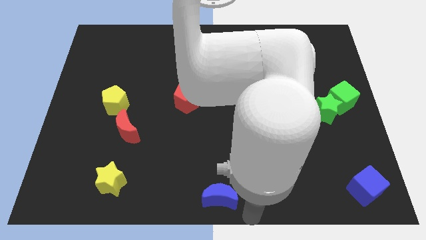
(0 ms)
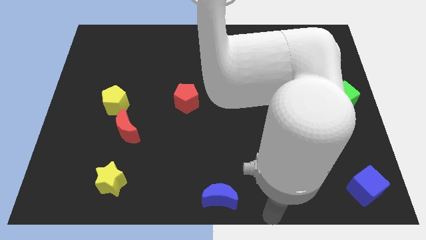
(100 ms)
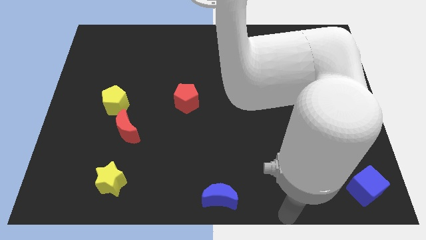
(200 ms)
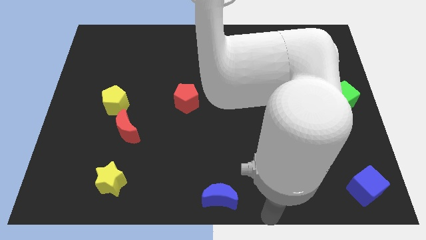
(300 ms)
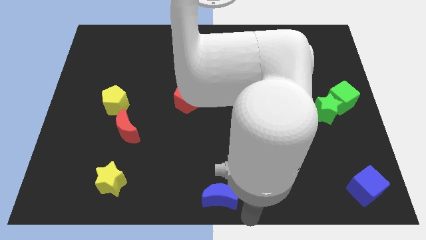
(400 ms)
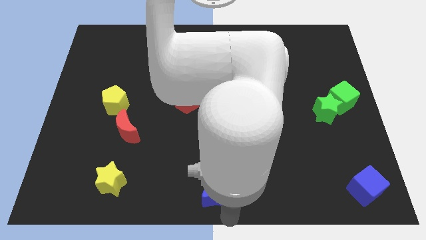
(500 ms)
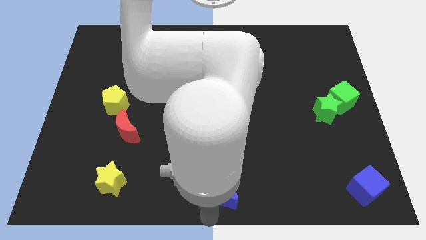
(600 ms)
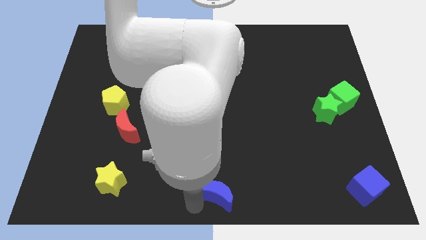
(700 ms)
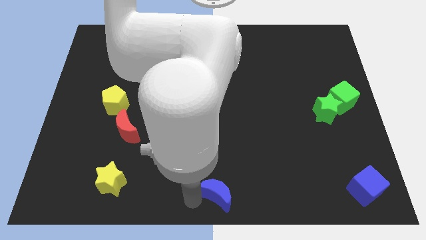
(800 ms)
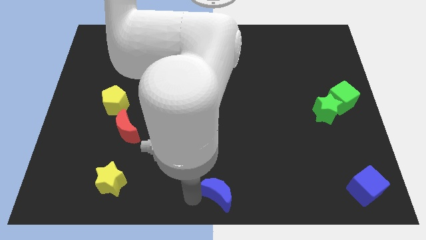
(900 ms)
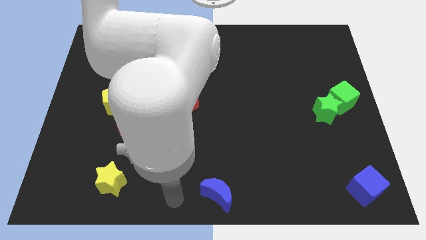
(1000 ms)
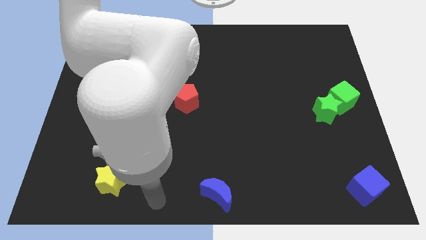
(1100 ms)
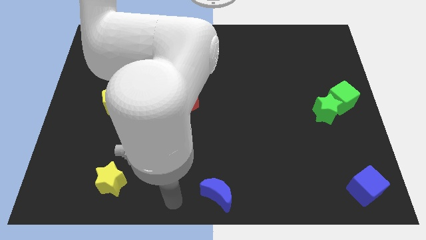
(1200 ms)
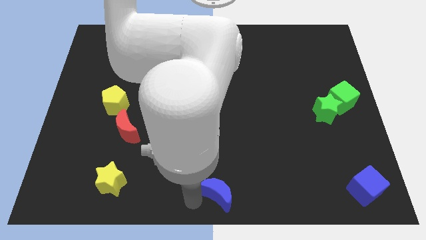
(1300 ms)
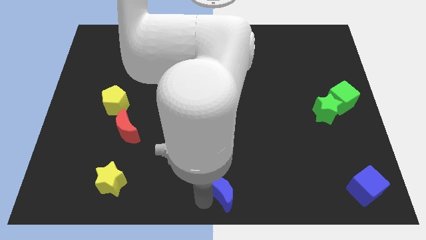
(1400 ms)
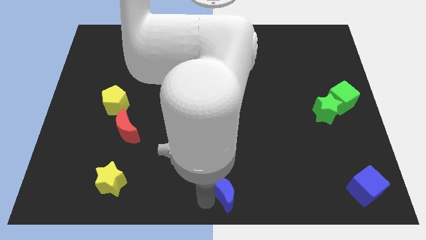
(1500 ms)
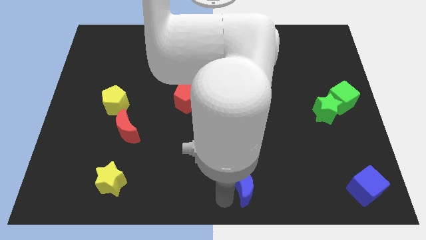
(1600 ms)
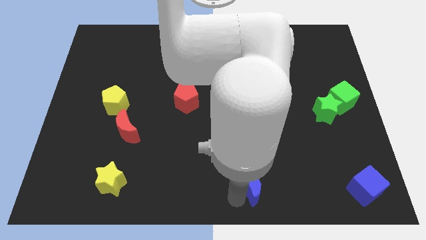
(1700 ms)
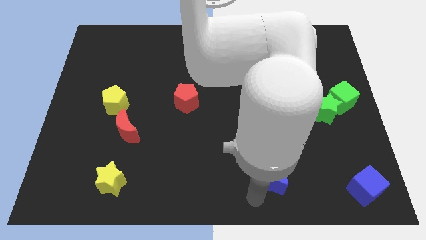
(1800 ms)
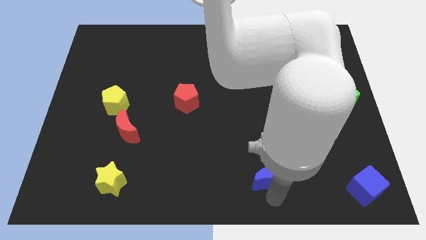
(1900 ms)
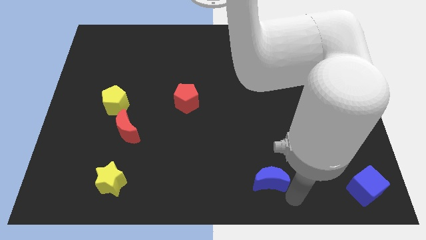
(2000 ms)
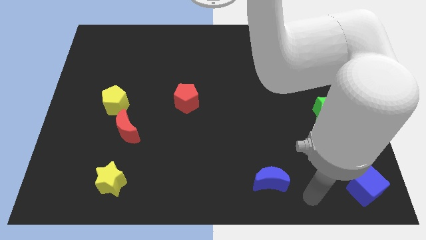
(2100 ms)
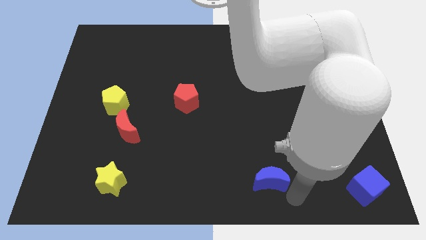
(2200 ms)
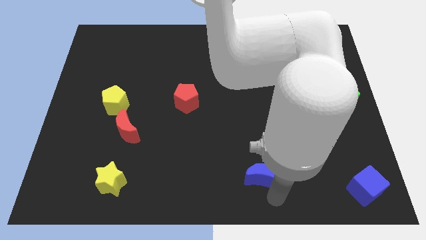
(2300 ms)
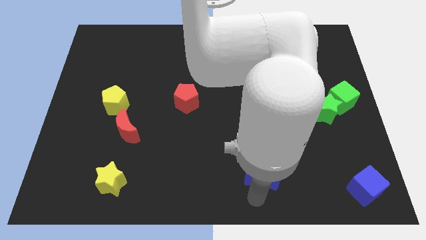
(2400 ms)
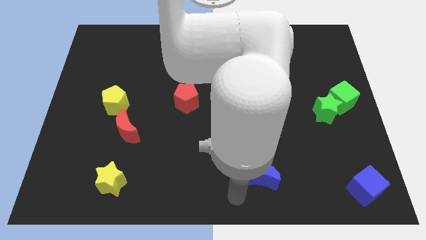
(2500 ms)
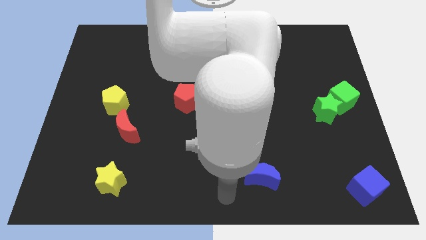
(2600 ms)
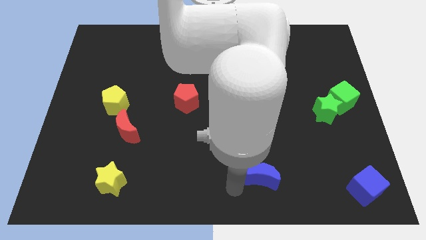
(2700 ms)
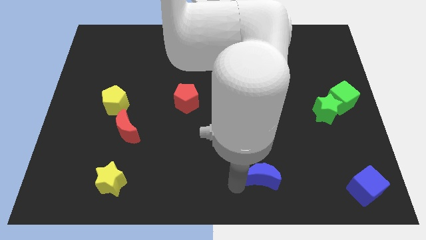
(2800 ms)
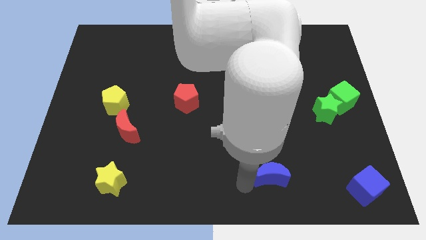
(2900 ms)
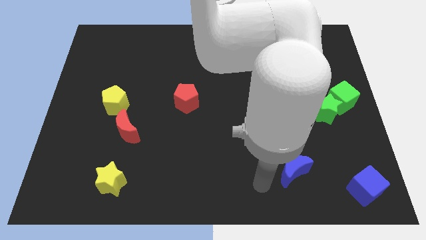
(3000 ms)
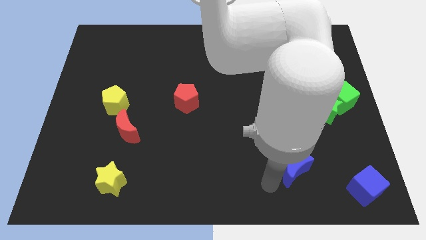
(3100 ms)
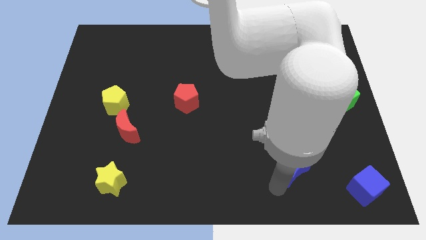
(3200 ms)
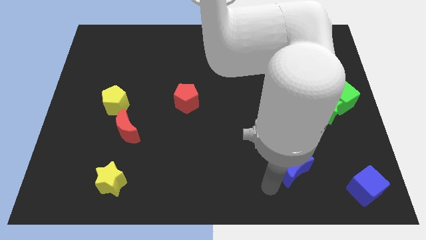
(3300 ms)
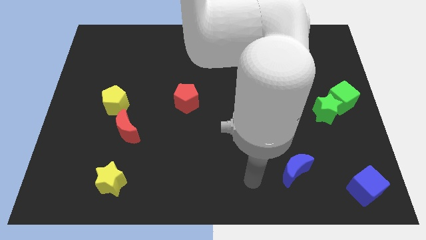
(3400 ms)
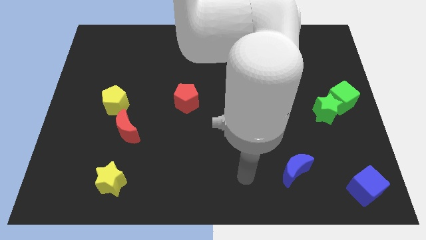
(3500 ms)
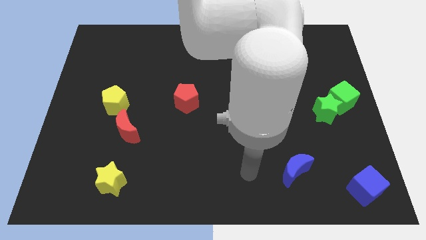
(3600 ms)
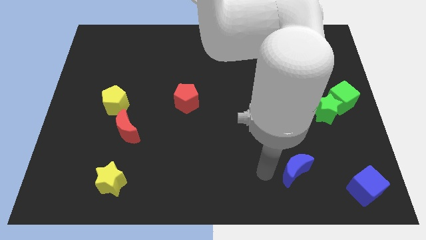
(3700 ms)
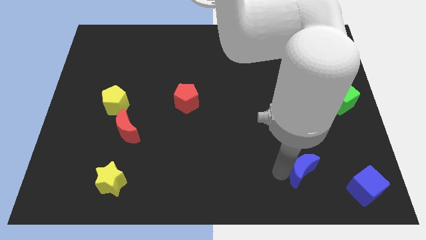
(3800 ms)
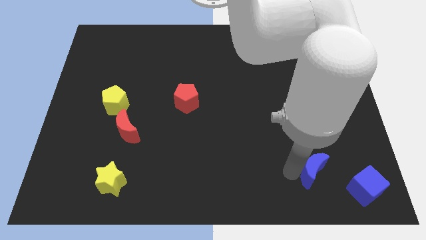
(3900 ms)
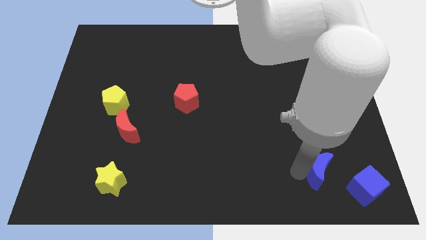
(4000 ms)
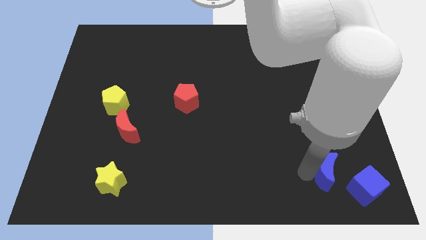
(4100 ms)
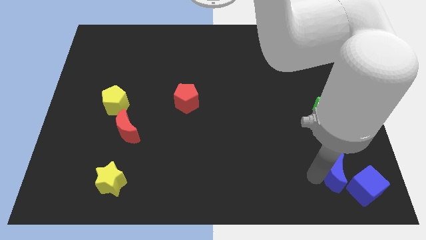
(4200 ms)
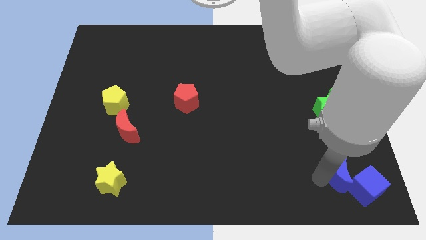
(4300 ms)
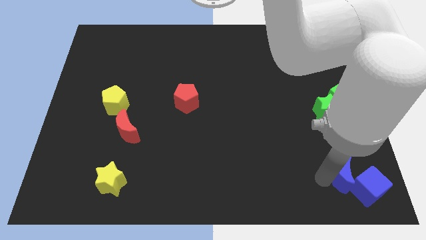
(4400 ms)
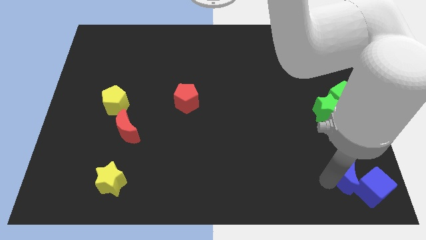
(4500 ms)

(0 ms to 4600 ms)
push the blue moon into the blue cube

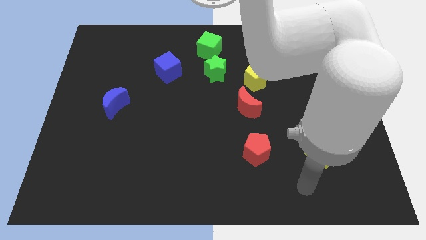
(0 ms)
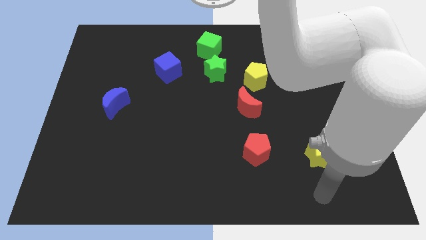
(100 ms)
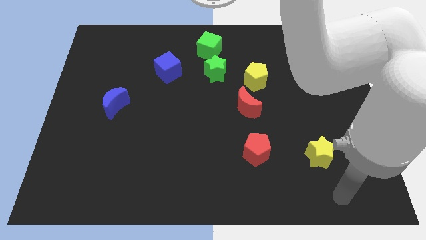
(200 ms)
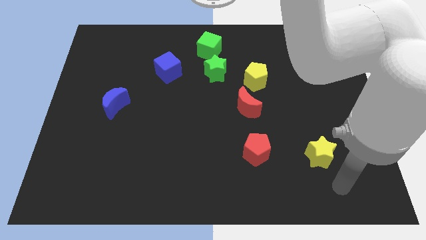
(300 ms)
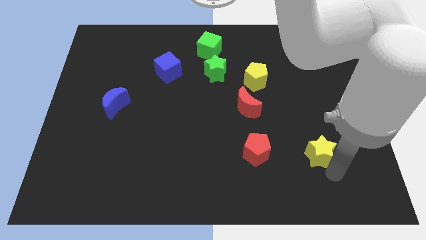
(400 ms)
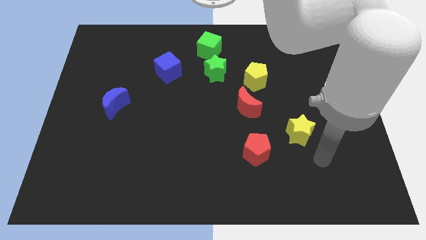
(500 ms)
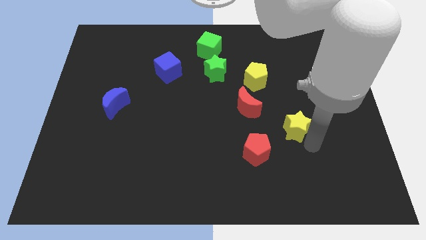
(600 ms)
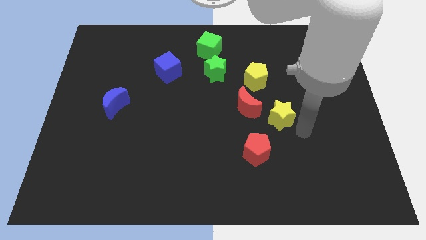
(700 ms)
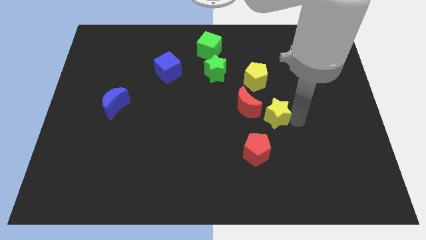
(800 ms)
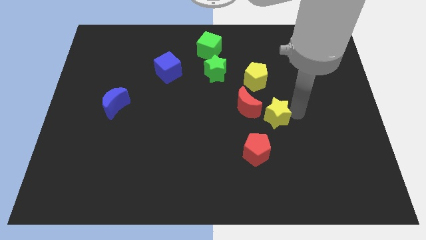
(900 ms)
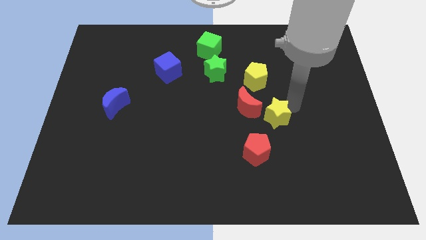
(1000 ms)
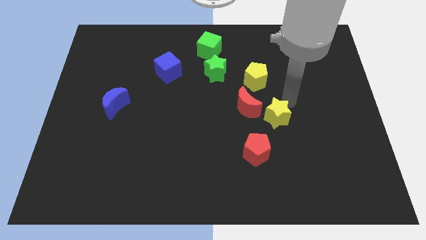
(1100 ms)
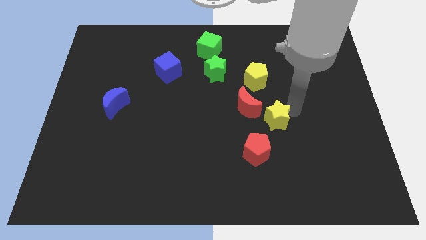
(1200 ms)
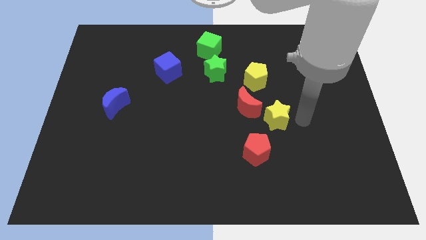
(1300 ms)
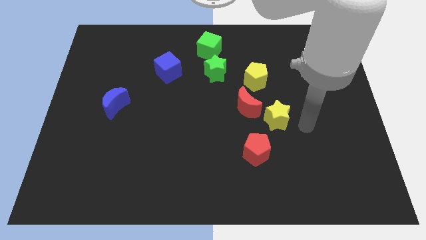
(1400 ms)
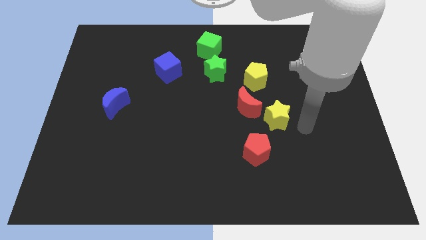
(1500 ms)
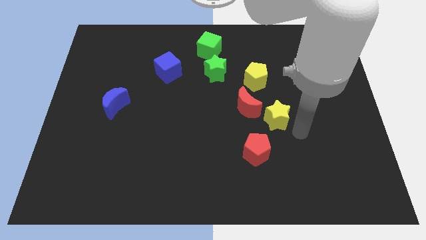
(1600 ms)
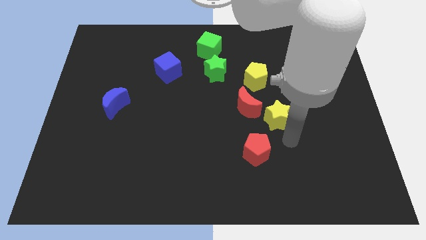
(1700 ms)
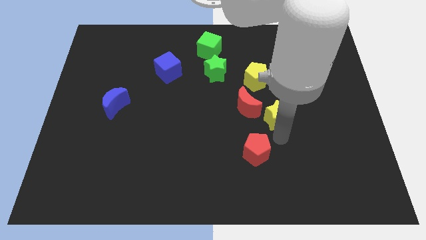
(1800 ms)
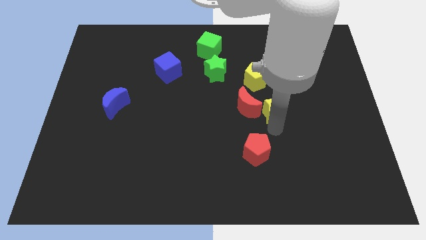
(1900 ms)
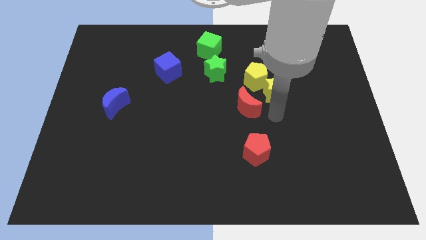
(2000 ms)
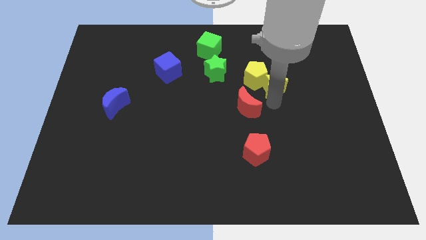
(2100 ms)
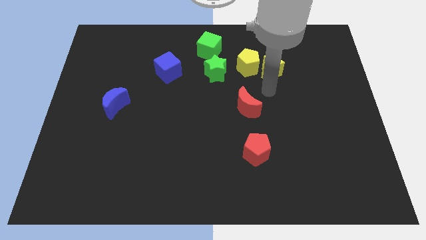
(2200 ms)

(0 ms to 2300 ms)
move the yellow star into yellow pentagon diagonally

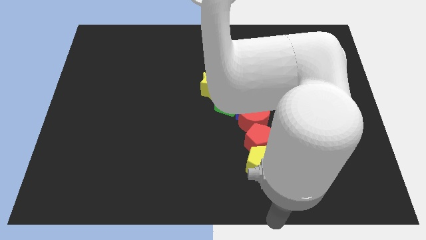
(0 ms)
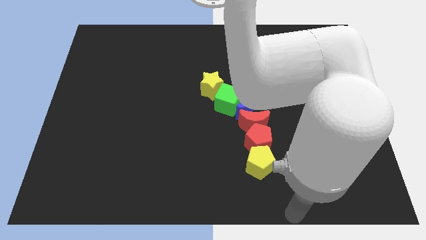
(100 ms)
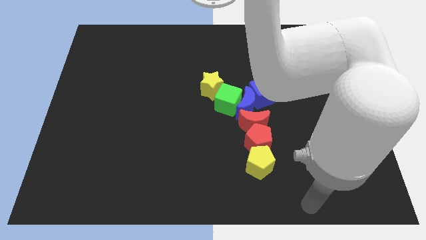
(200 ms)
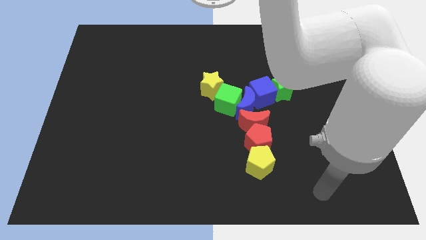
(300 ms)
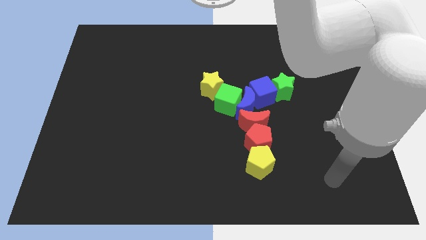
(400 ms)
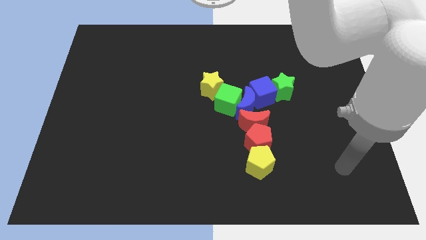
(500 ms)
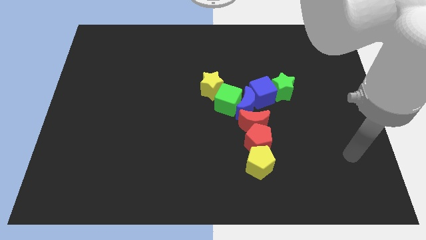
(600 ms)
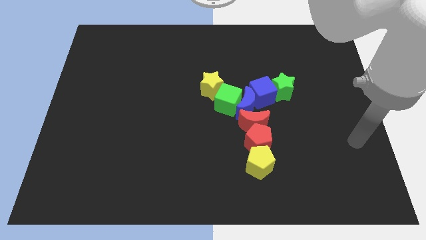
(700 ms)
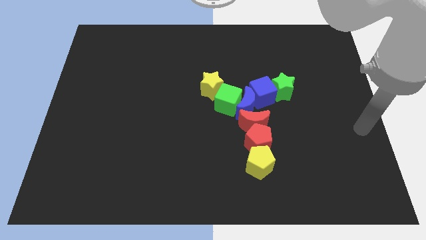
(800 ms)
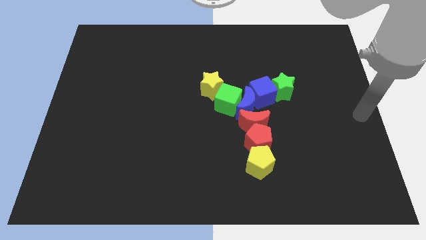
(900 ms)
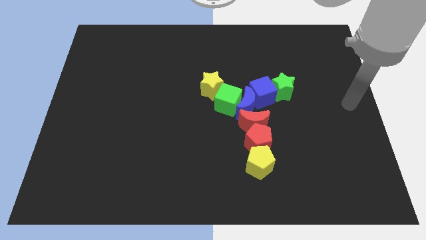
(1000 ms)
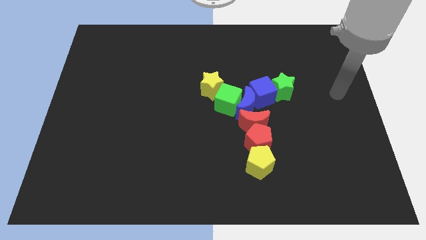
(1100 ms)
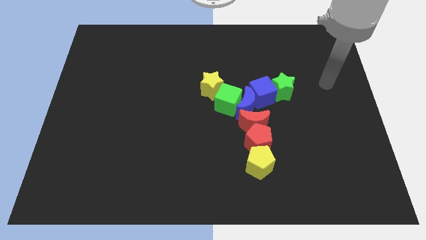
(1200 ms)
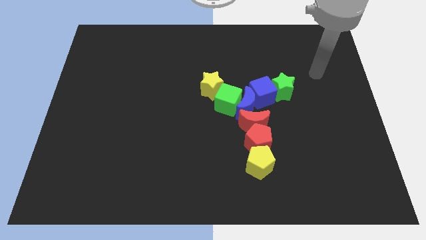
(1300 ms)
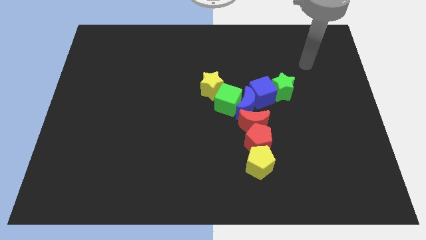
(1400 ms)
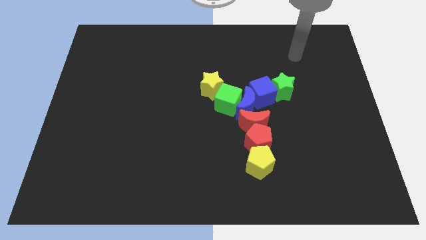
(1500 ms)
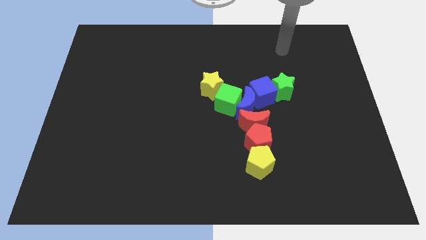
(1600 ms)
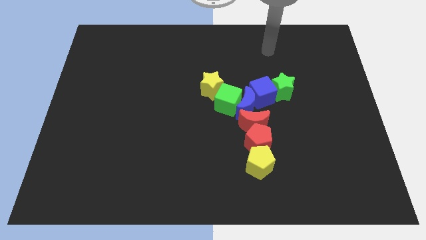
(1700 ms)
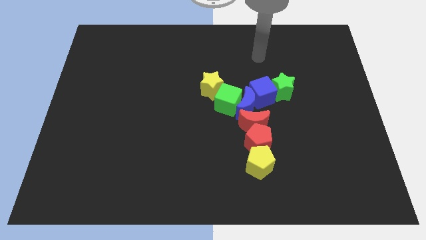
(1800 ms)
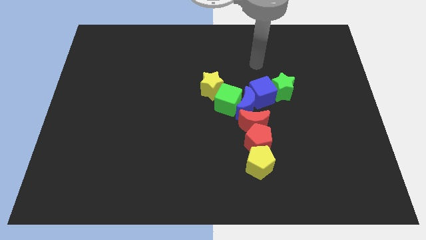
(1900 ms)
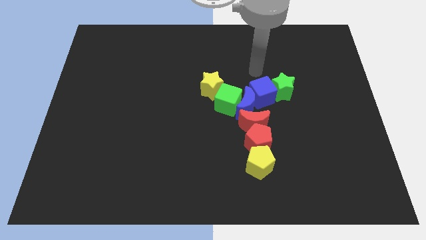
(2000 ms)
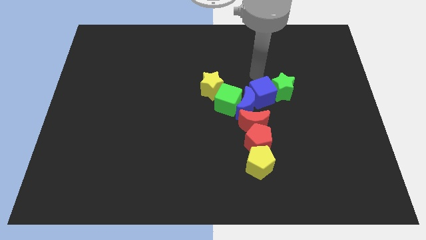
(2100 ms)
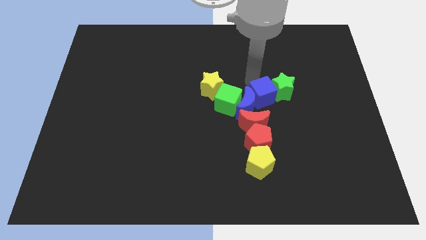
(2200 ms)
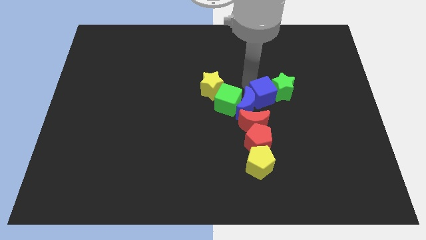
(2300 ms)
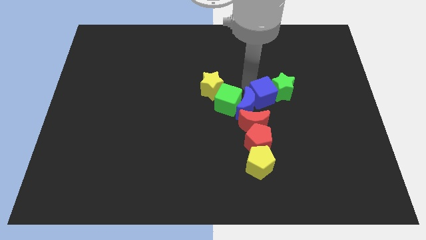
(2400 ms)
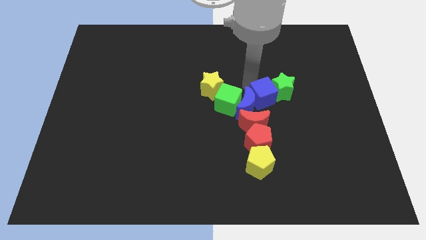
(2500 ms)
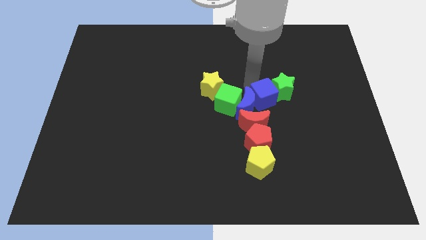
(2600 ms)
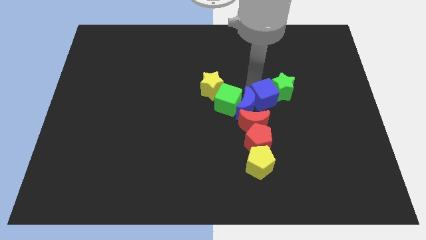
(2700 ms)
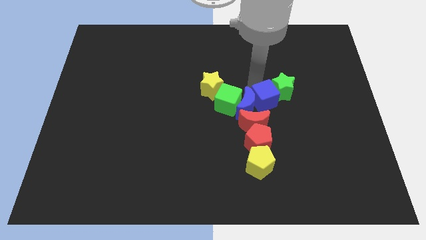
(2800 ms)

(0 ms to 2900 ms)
point your arm above blue cube
